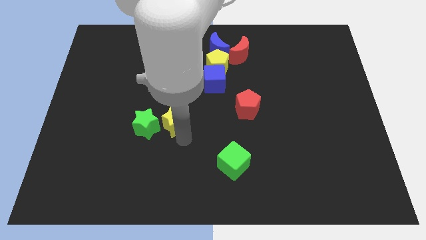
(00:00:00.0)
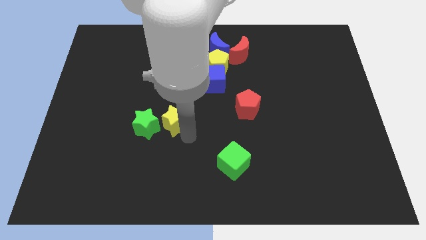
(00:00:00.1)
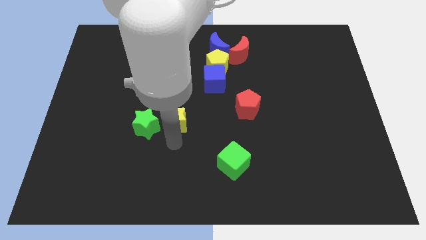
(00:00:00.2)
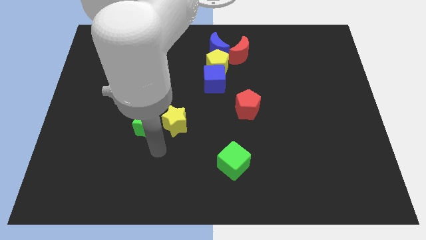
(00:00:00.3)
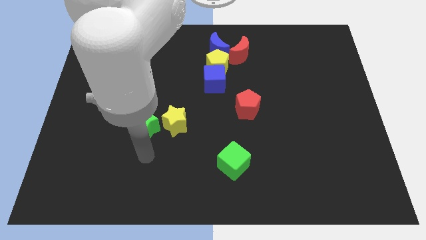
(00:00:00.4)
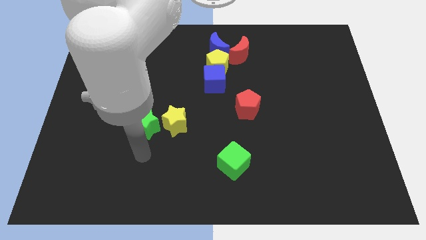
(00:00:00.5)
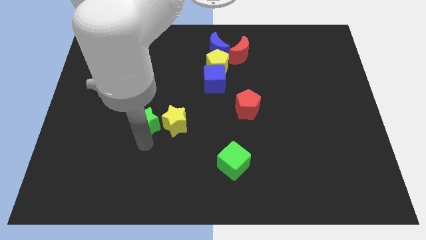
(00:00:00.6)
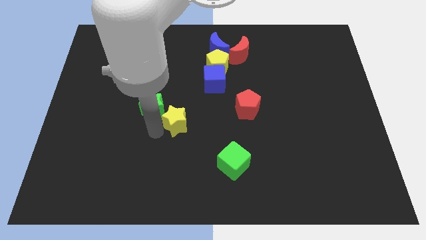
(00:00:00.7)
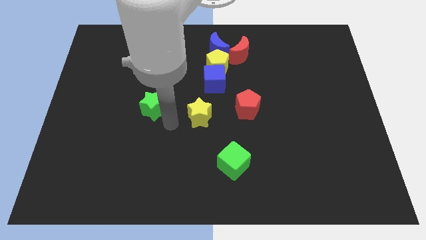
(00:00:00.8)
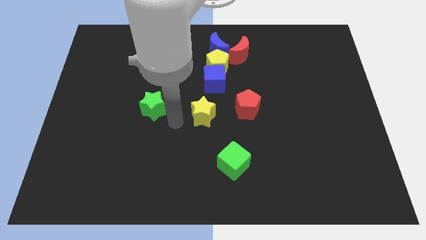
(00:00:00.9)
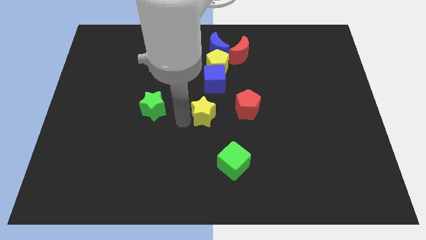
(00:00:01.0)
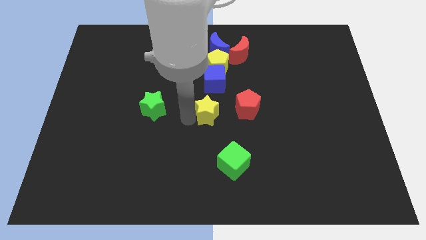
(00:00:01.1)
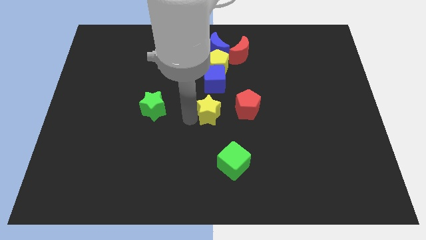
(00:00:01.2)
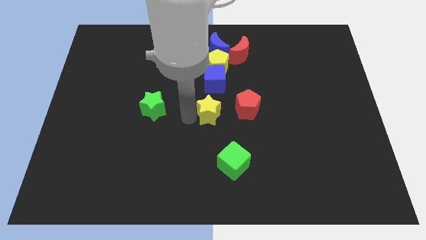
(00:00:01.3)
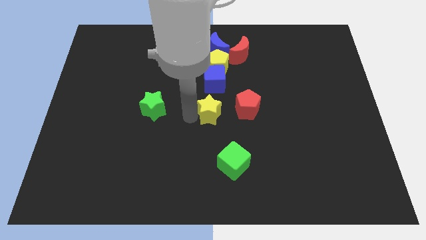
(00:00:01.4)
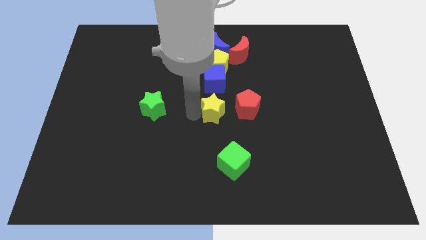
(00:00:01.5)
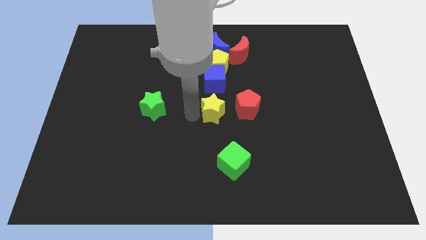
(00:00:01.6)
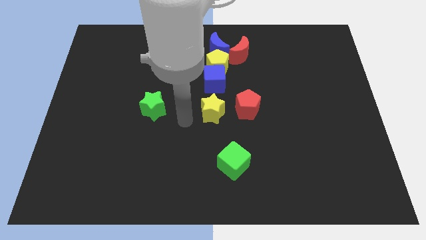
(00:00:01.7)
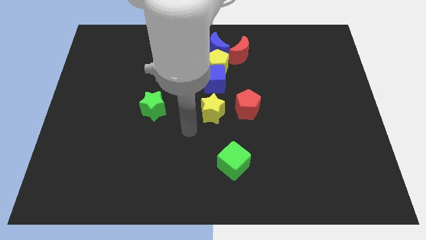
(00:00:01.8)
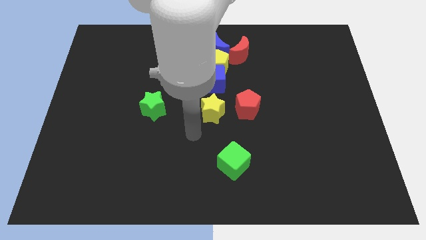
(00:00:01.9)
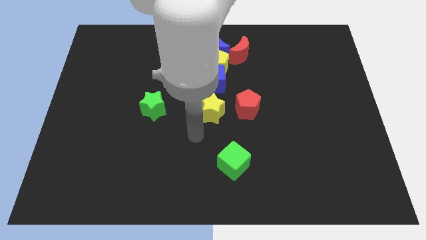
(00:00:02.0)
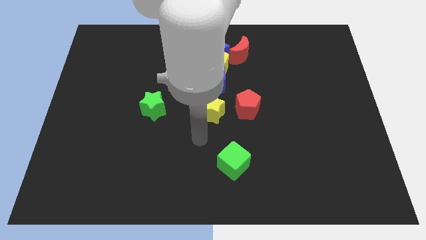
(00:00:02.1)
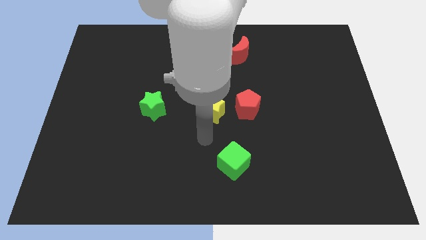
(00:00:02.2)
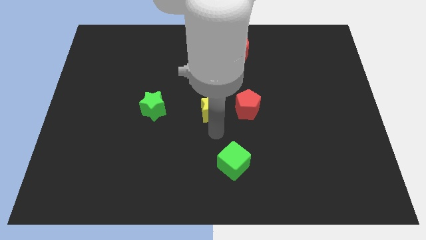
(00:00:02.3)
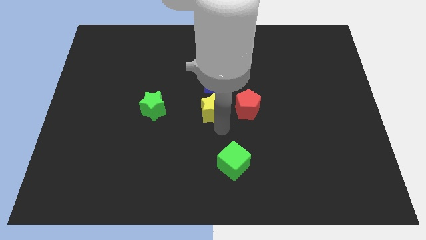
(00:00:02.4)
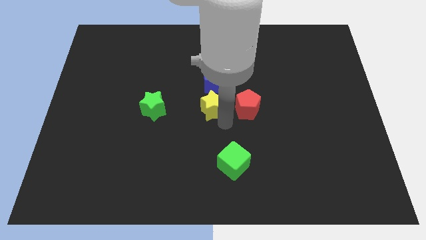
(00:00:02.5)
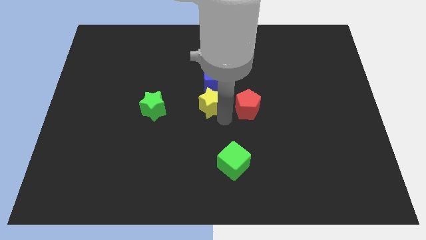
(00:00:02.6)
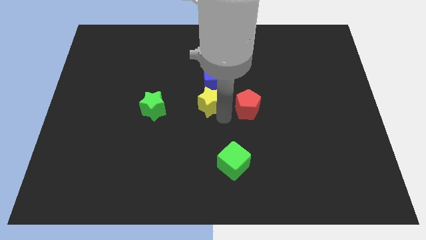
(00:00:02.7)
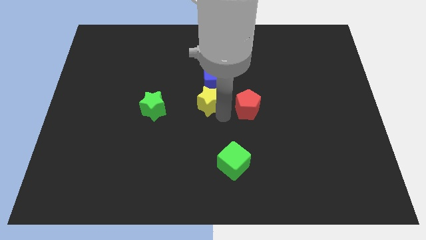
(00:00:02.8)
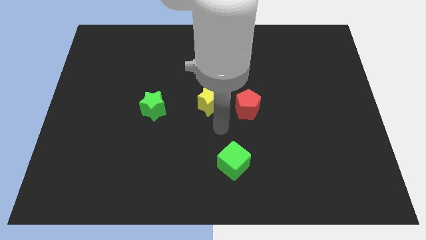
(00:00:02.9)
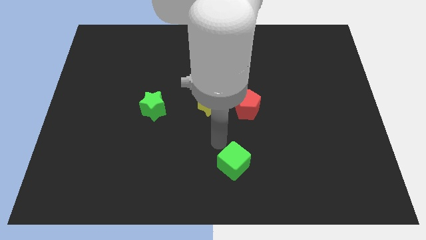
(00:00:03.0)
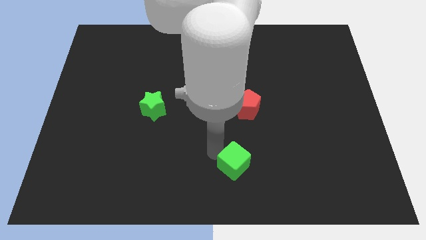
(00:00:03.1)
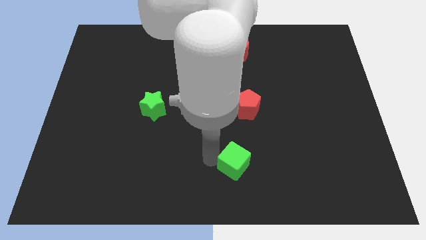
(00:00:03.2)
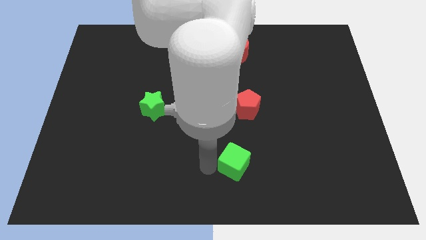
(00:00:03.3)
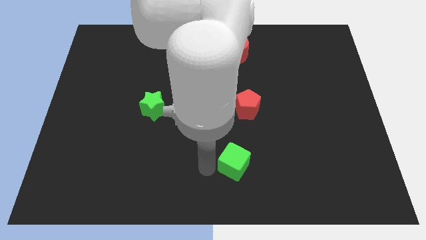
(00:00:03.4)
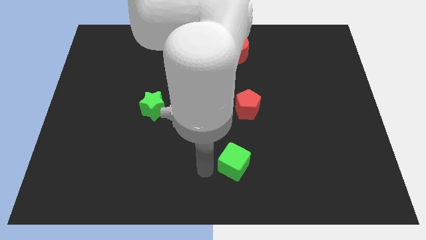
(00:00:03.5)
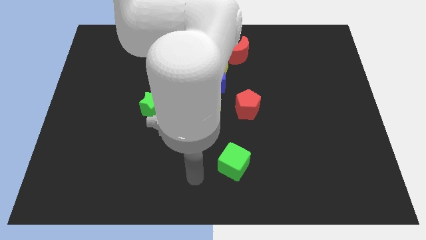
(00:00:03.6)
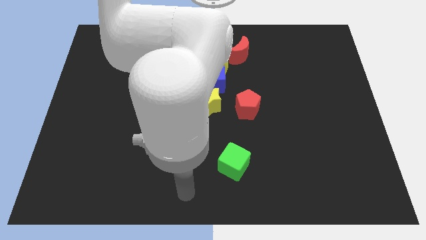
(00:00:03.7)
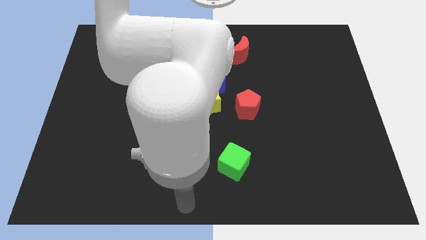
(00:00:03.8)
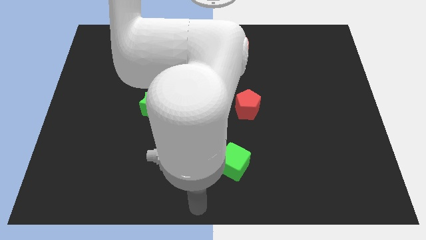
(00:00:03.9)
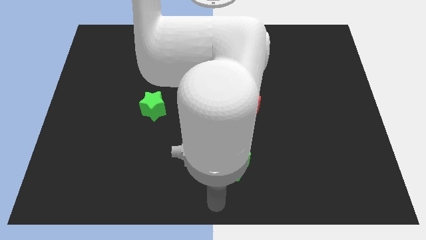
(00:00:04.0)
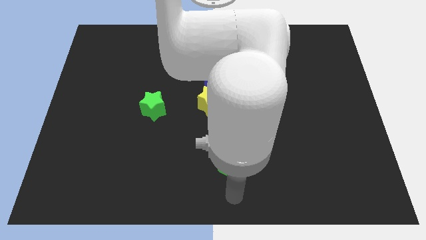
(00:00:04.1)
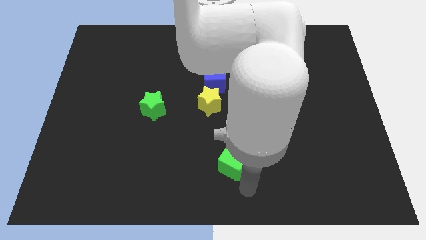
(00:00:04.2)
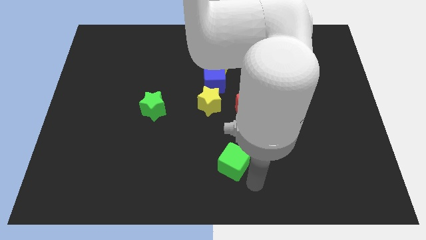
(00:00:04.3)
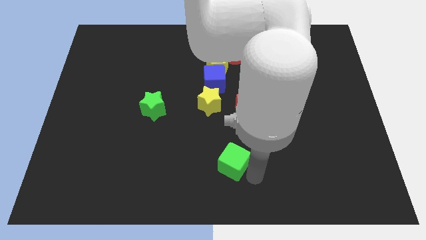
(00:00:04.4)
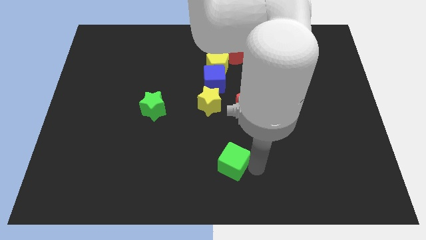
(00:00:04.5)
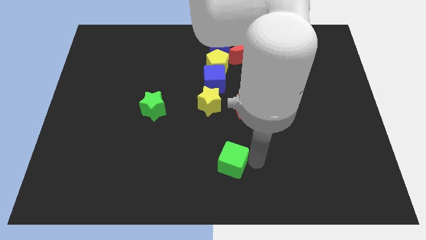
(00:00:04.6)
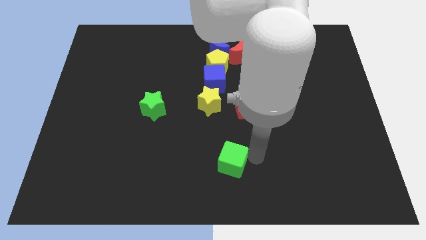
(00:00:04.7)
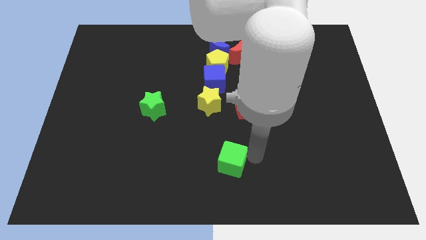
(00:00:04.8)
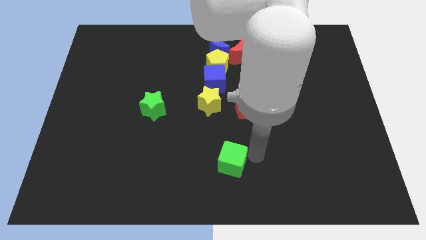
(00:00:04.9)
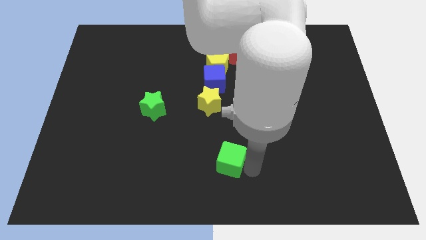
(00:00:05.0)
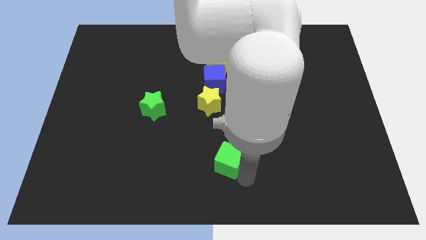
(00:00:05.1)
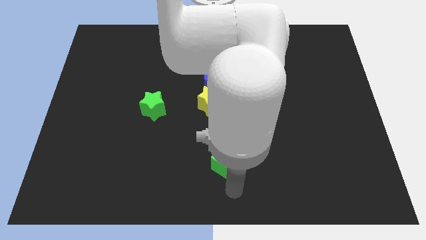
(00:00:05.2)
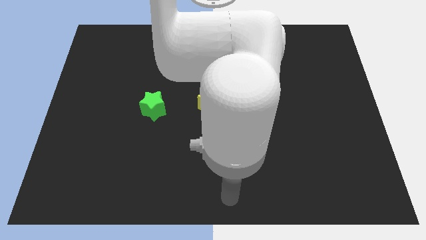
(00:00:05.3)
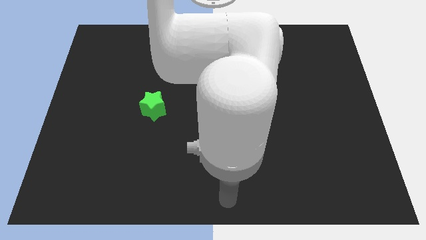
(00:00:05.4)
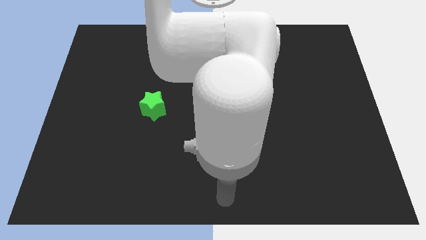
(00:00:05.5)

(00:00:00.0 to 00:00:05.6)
place the yellow star underneath the blue cube

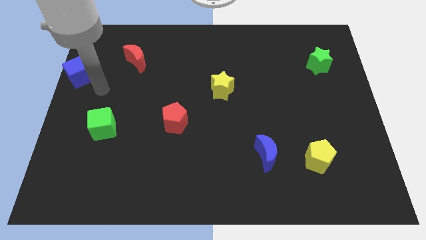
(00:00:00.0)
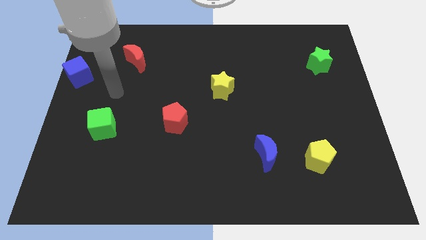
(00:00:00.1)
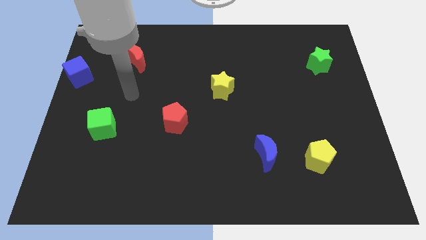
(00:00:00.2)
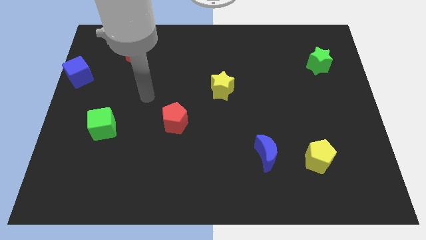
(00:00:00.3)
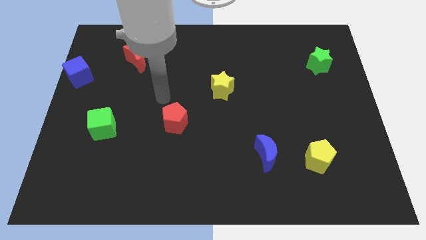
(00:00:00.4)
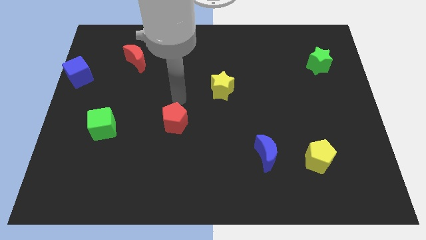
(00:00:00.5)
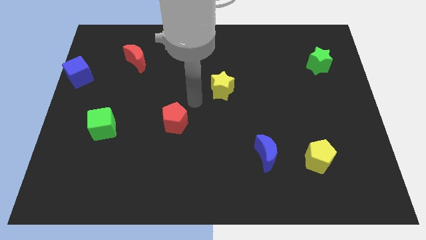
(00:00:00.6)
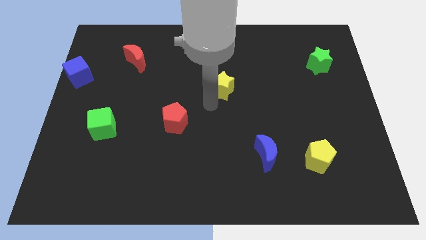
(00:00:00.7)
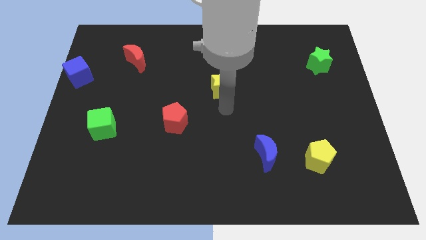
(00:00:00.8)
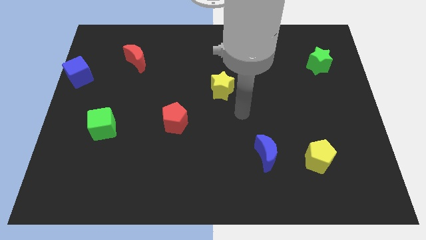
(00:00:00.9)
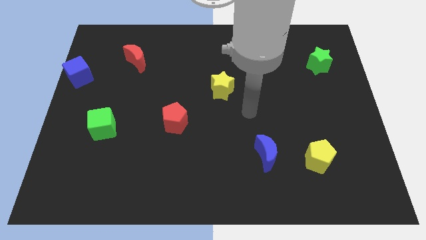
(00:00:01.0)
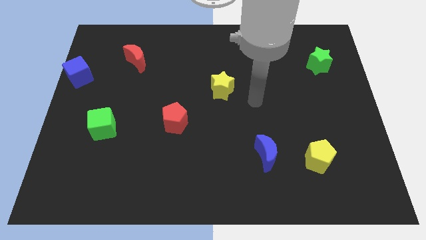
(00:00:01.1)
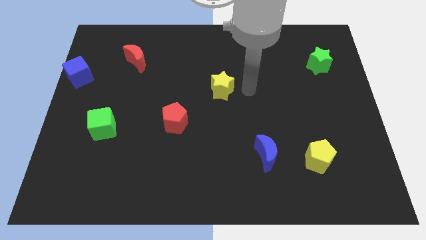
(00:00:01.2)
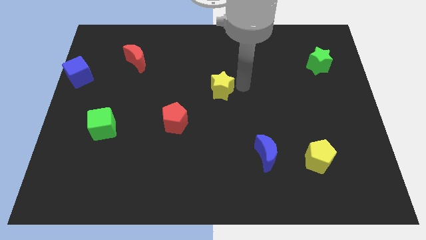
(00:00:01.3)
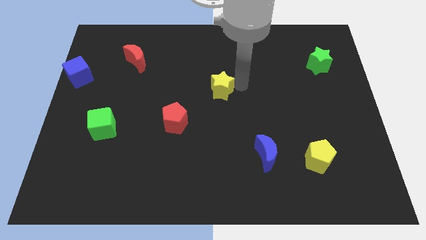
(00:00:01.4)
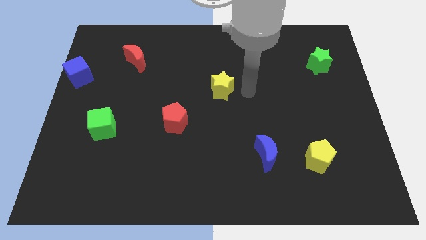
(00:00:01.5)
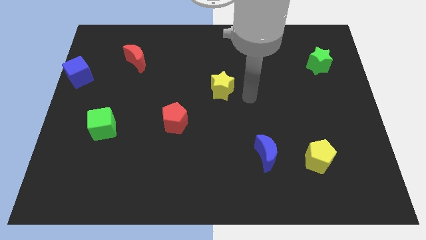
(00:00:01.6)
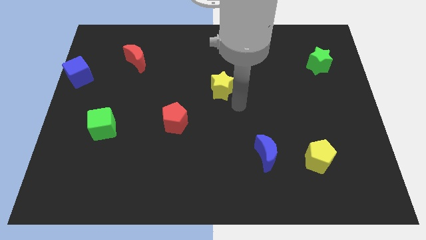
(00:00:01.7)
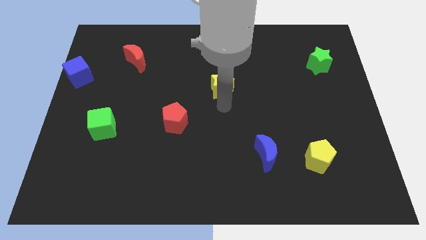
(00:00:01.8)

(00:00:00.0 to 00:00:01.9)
point your arm to the bottom of yellow star

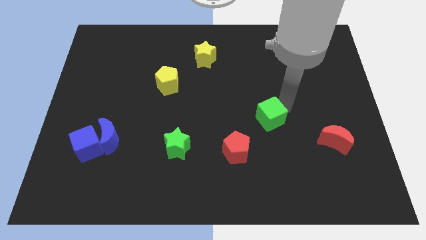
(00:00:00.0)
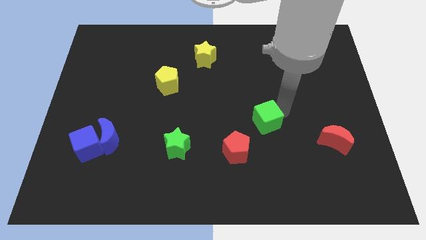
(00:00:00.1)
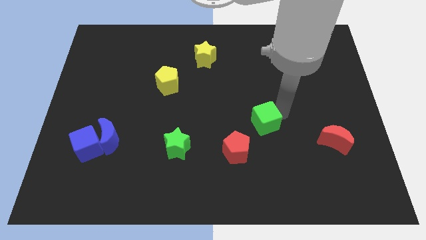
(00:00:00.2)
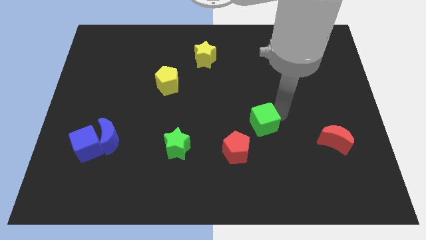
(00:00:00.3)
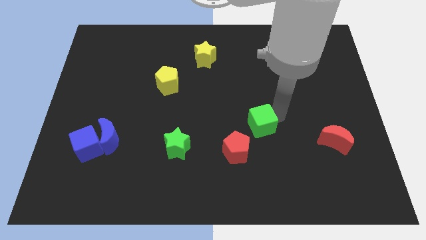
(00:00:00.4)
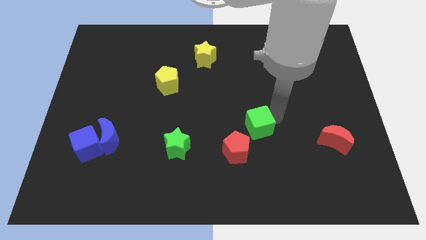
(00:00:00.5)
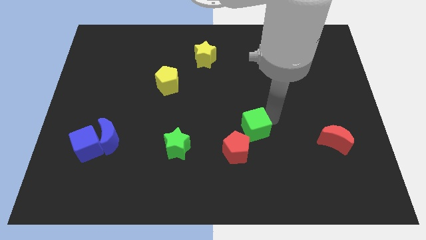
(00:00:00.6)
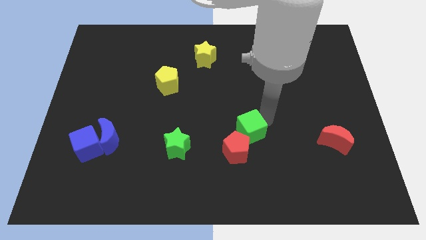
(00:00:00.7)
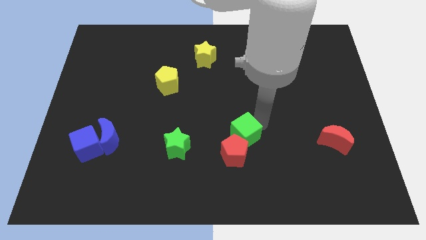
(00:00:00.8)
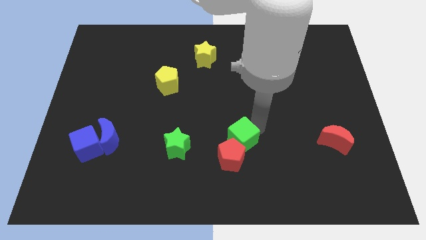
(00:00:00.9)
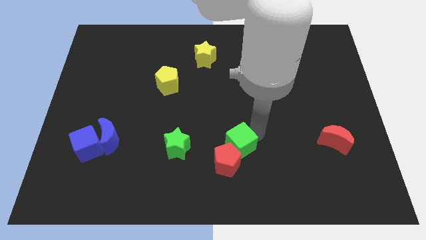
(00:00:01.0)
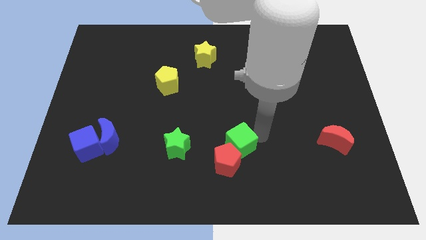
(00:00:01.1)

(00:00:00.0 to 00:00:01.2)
push the green cube into the red pentagon towards the bottom center of the board

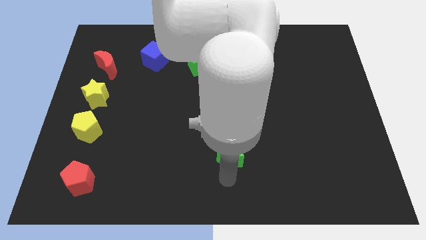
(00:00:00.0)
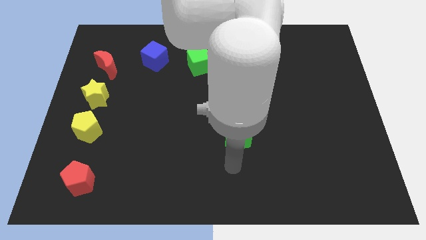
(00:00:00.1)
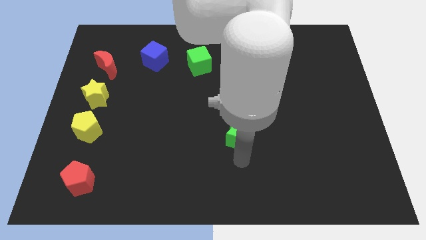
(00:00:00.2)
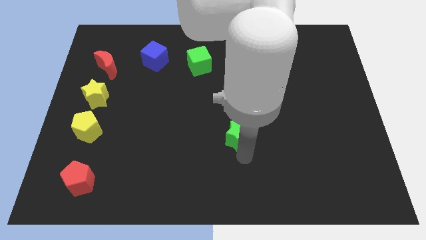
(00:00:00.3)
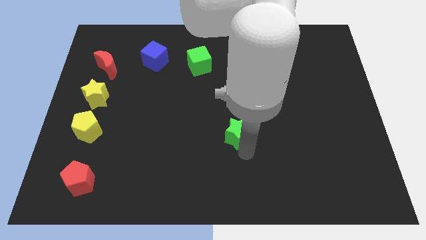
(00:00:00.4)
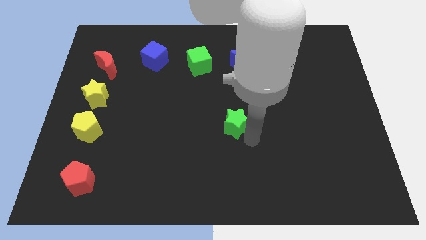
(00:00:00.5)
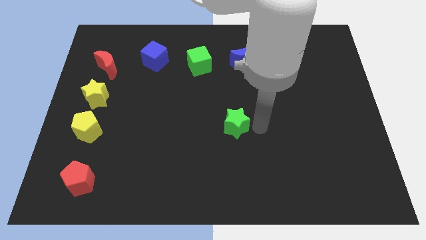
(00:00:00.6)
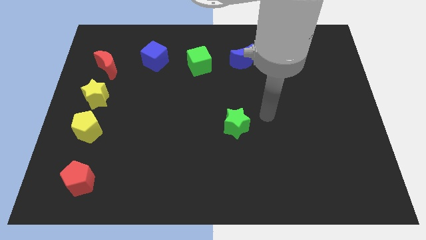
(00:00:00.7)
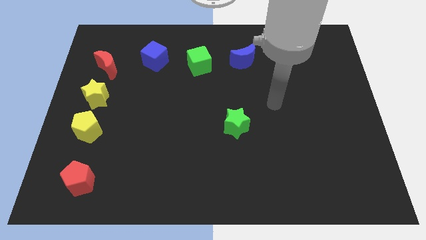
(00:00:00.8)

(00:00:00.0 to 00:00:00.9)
slide the green star parallel to yellow pentagon
